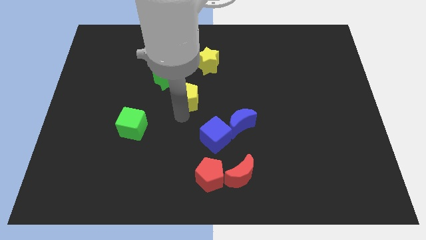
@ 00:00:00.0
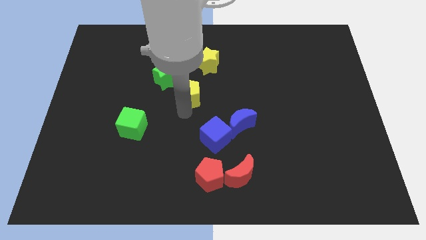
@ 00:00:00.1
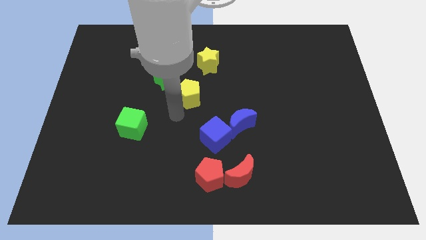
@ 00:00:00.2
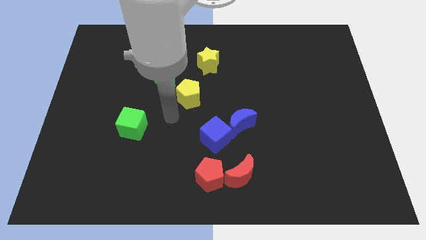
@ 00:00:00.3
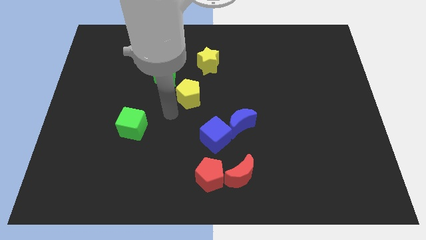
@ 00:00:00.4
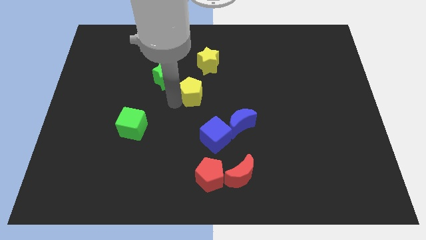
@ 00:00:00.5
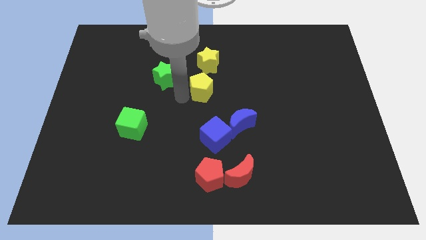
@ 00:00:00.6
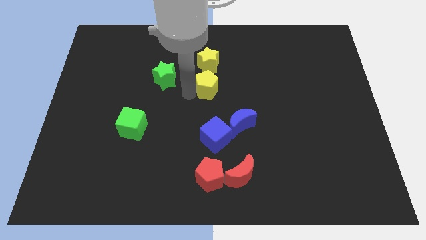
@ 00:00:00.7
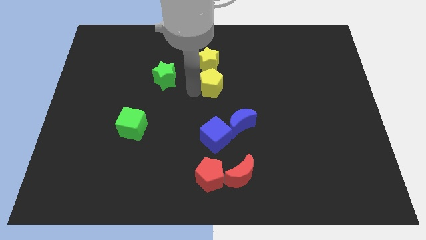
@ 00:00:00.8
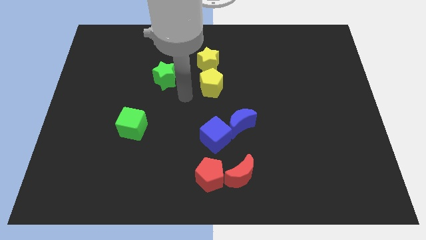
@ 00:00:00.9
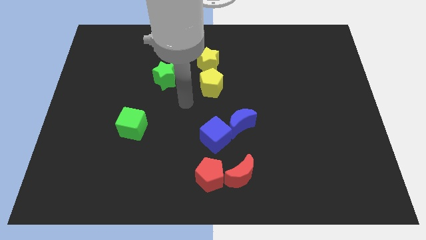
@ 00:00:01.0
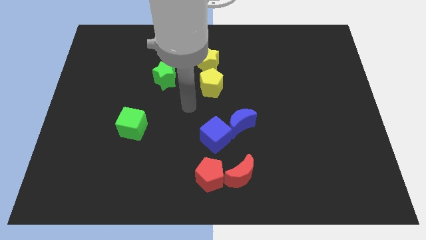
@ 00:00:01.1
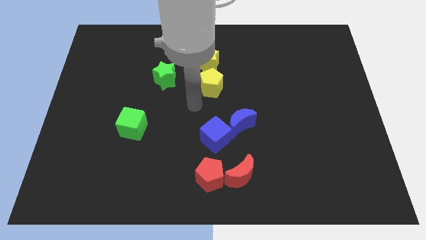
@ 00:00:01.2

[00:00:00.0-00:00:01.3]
place the yellow pentagon below the yellow star

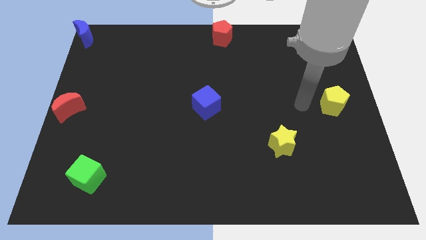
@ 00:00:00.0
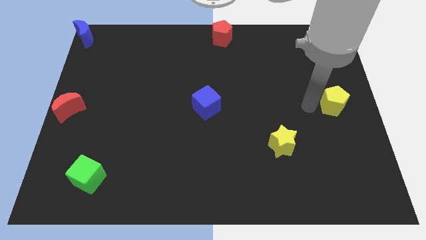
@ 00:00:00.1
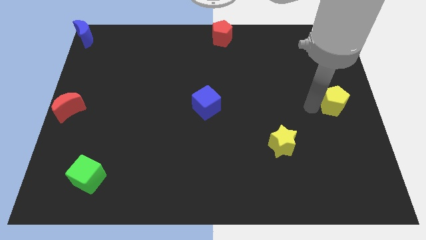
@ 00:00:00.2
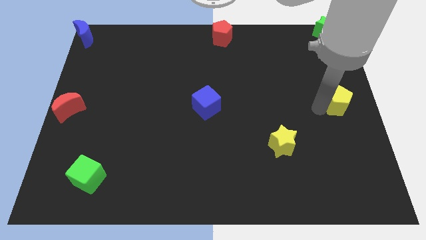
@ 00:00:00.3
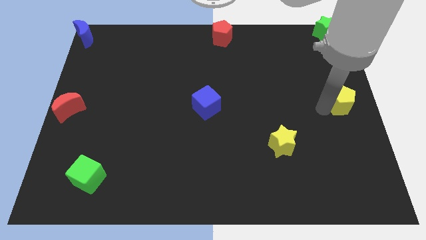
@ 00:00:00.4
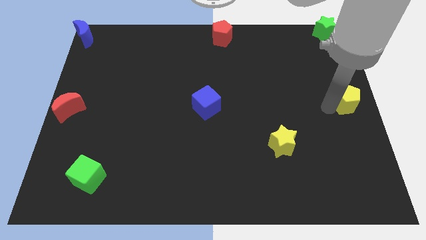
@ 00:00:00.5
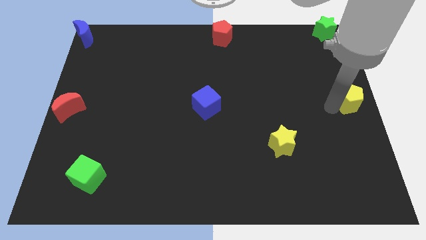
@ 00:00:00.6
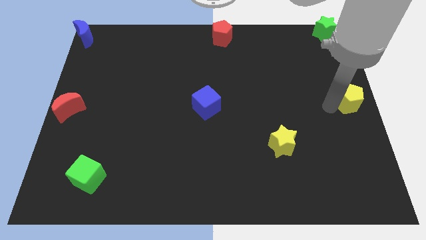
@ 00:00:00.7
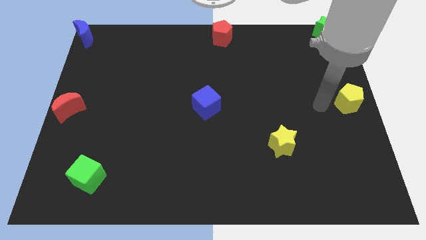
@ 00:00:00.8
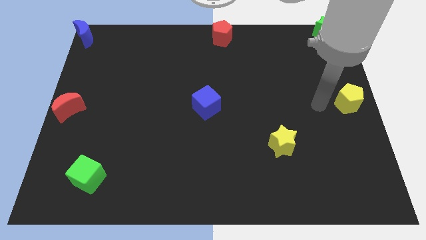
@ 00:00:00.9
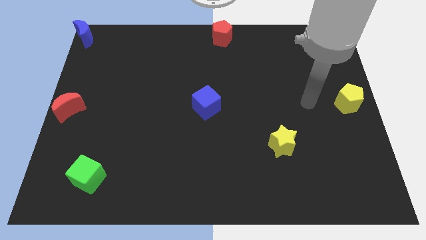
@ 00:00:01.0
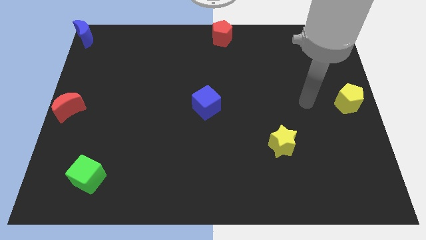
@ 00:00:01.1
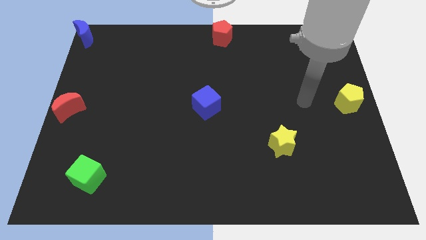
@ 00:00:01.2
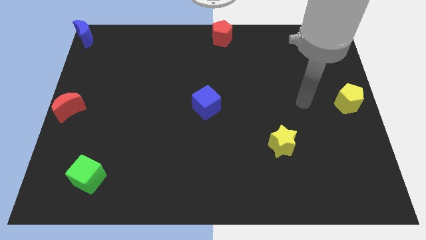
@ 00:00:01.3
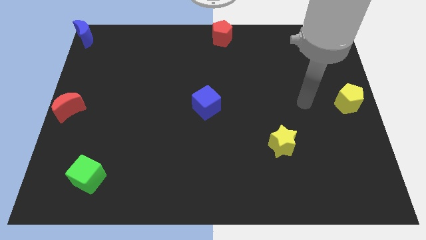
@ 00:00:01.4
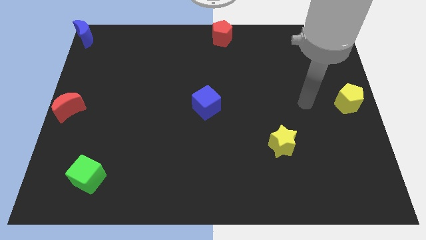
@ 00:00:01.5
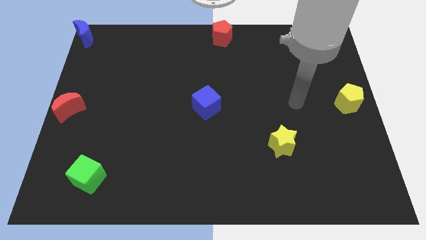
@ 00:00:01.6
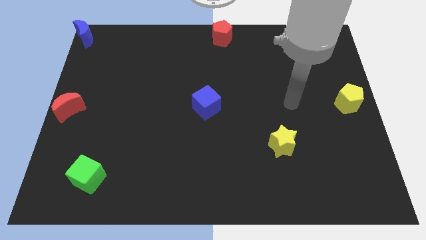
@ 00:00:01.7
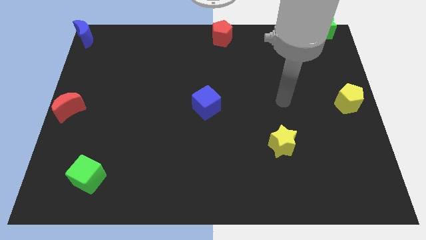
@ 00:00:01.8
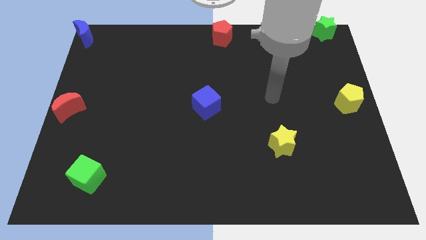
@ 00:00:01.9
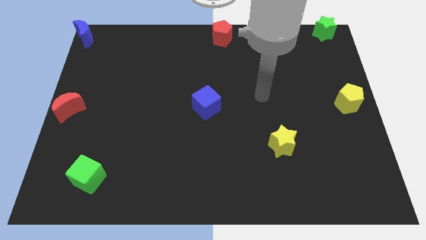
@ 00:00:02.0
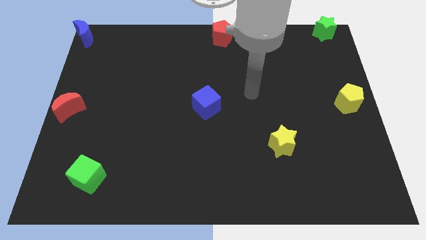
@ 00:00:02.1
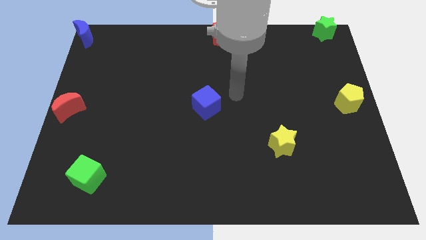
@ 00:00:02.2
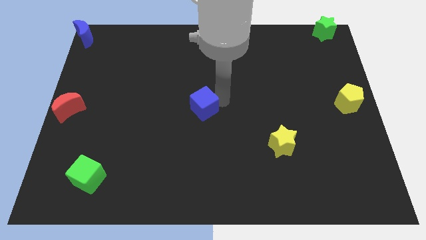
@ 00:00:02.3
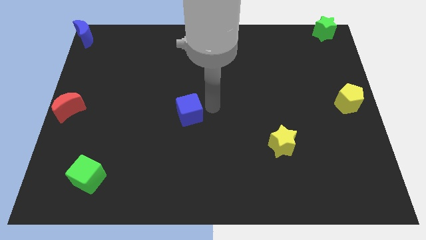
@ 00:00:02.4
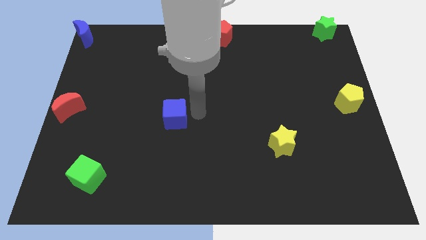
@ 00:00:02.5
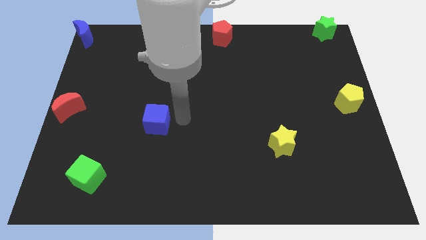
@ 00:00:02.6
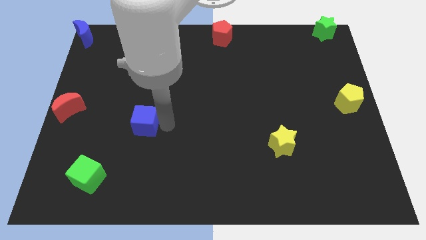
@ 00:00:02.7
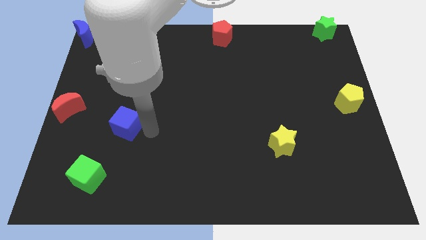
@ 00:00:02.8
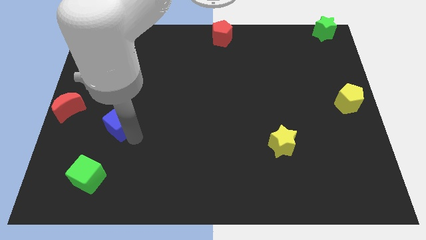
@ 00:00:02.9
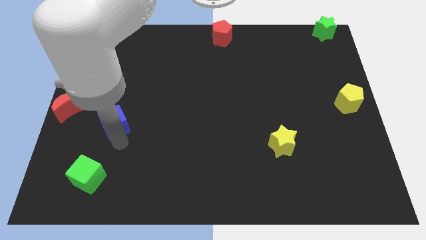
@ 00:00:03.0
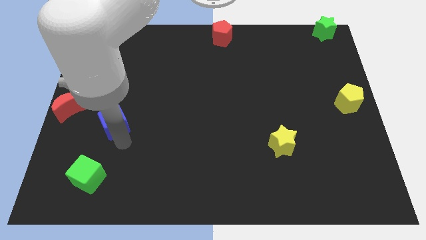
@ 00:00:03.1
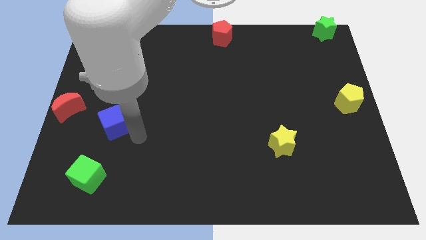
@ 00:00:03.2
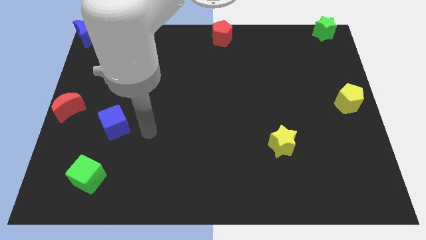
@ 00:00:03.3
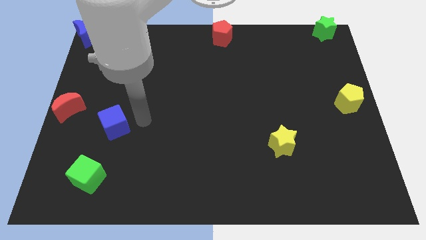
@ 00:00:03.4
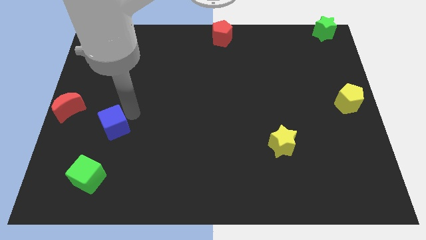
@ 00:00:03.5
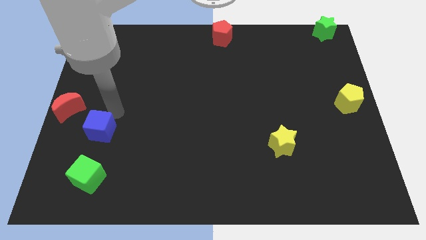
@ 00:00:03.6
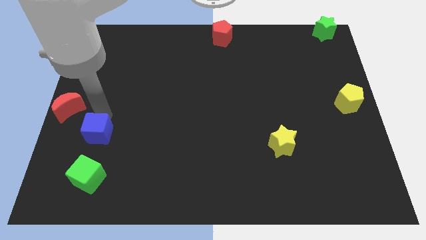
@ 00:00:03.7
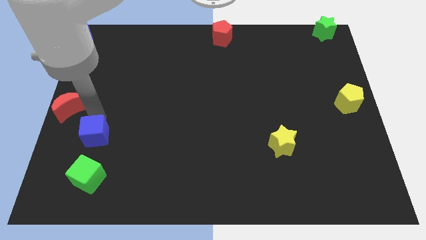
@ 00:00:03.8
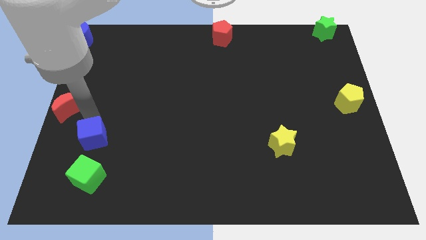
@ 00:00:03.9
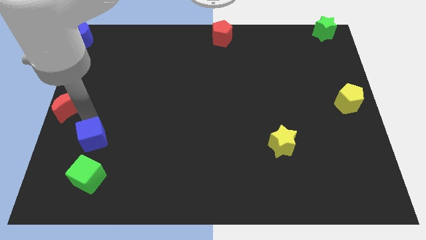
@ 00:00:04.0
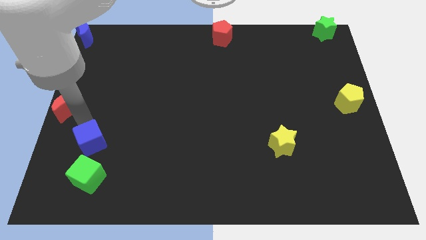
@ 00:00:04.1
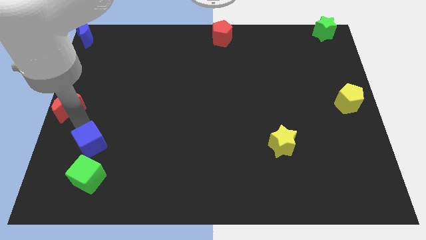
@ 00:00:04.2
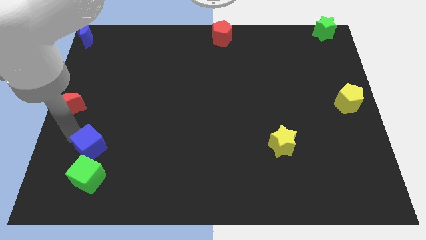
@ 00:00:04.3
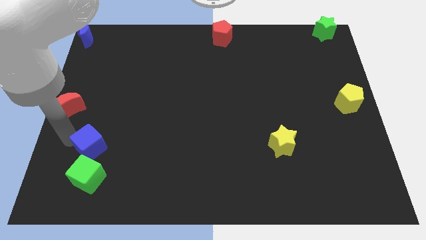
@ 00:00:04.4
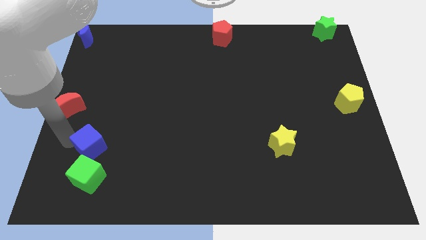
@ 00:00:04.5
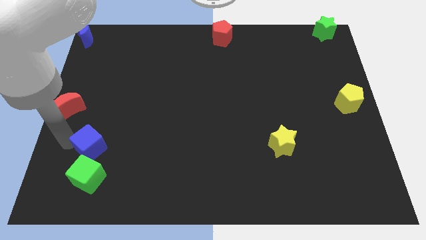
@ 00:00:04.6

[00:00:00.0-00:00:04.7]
place the blue cube to the top of the green cube

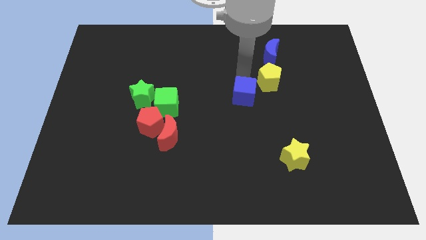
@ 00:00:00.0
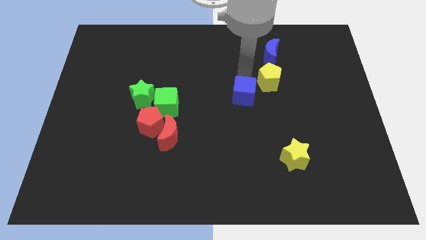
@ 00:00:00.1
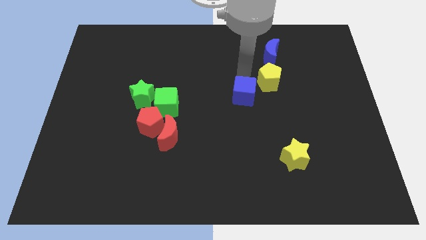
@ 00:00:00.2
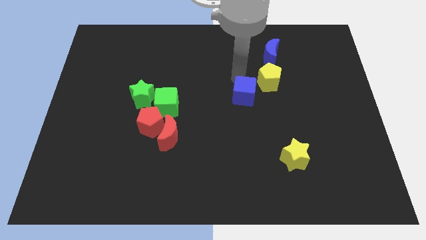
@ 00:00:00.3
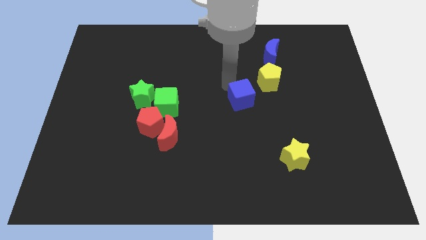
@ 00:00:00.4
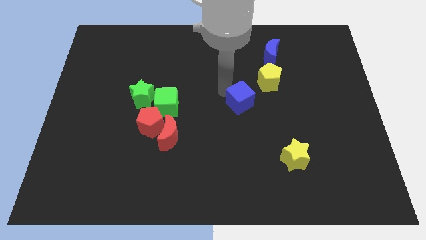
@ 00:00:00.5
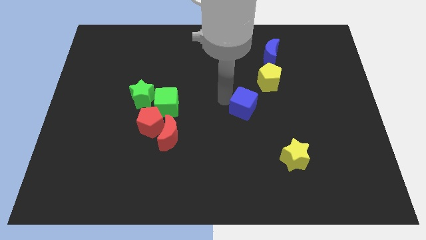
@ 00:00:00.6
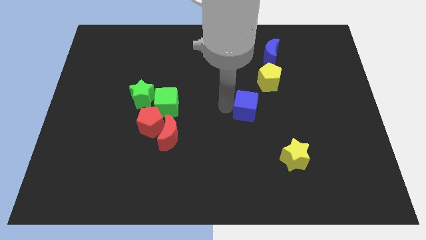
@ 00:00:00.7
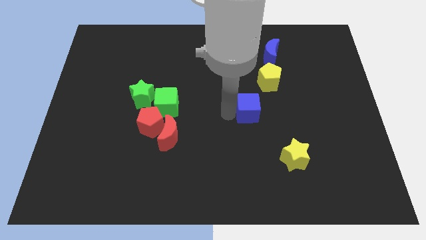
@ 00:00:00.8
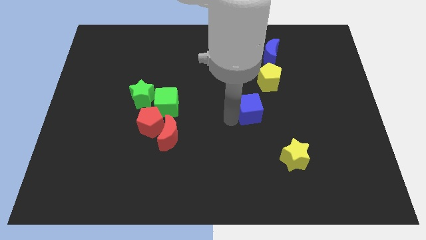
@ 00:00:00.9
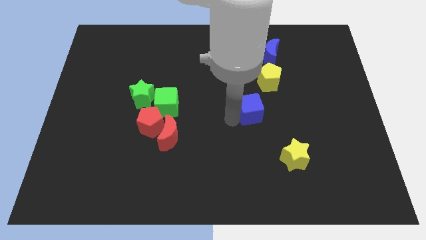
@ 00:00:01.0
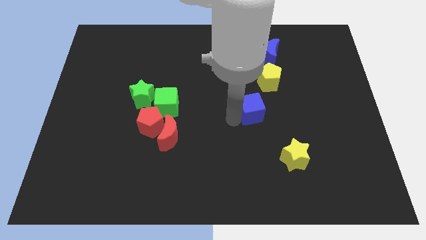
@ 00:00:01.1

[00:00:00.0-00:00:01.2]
push blue cube slightly downwards

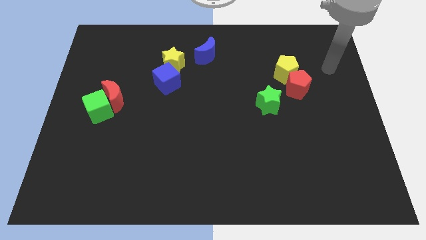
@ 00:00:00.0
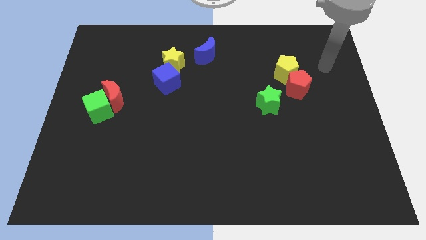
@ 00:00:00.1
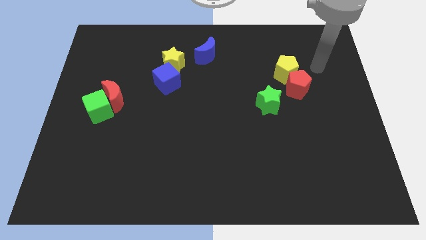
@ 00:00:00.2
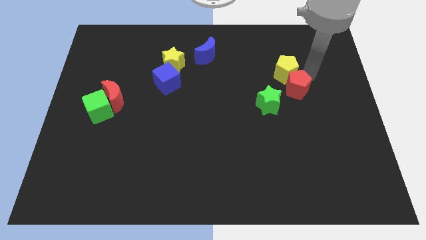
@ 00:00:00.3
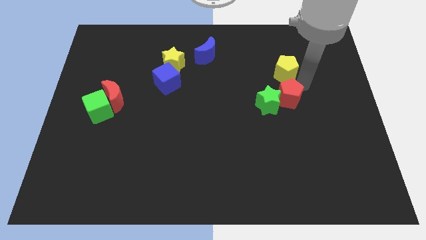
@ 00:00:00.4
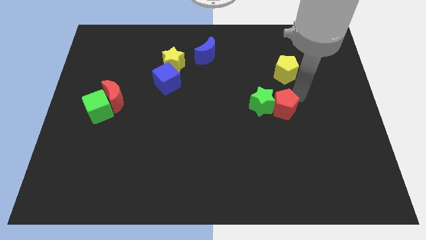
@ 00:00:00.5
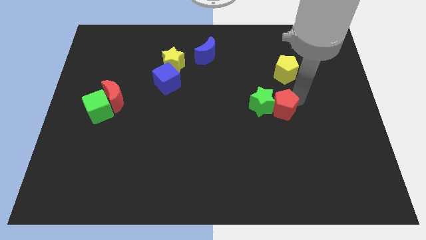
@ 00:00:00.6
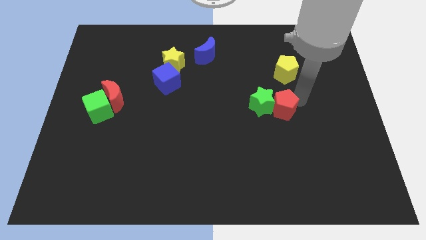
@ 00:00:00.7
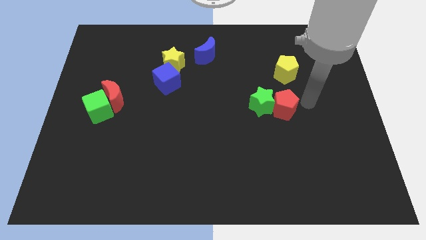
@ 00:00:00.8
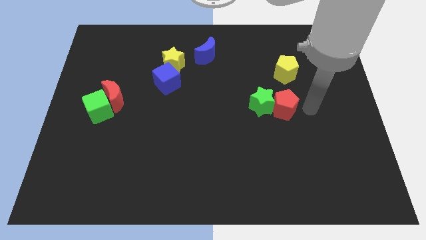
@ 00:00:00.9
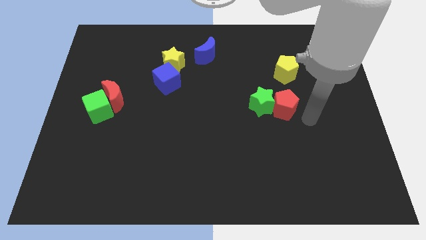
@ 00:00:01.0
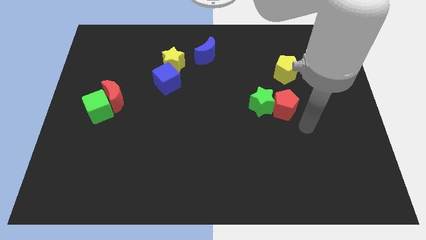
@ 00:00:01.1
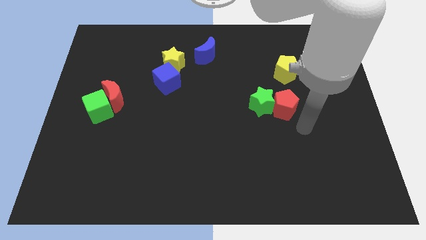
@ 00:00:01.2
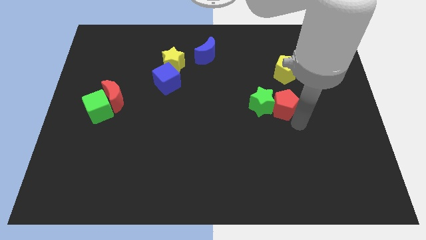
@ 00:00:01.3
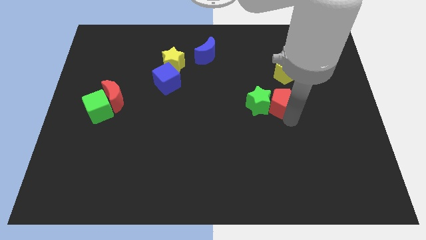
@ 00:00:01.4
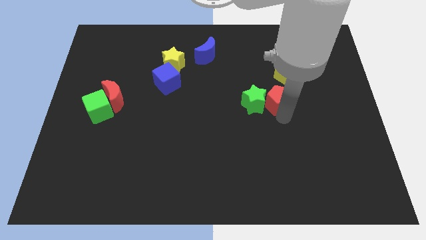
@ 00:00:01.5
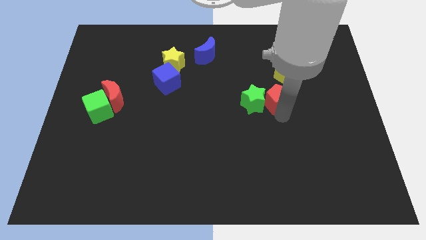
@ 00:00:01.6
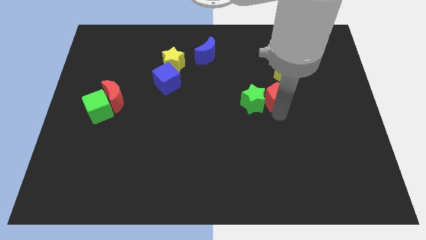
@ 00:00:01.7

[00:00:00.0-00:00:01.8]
place red pentagon to the bottom of yellow pentagon
